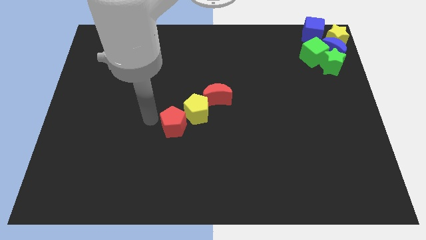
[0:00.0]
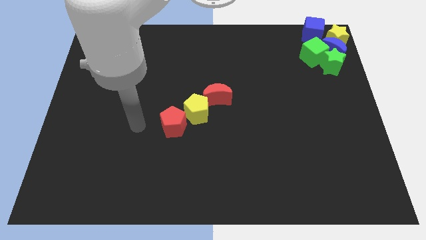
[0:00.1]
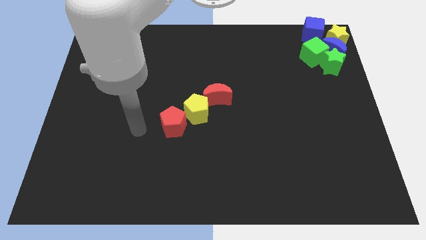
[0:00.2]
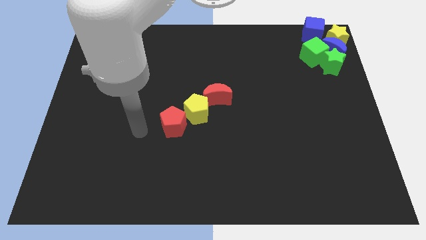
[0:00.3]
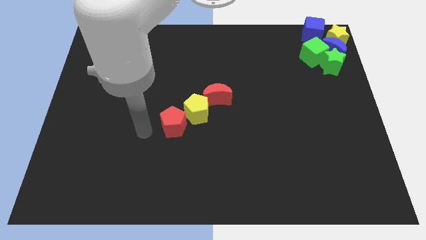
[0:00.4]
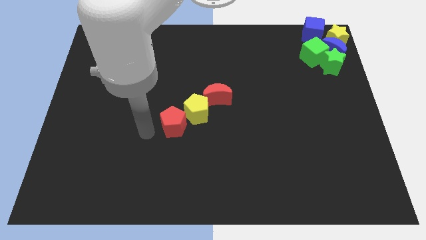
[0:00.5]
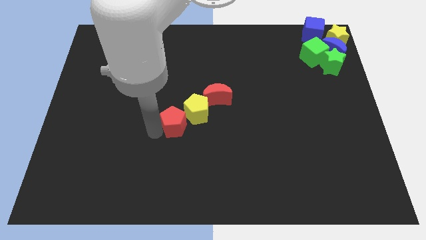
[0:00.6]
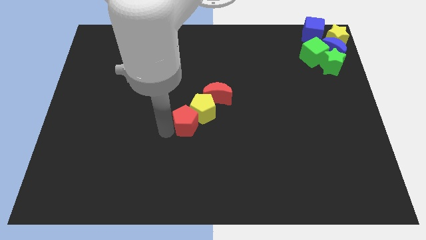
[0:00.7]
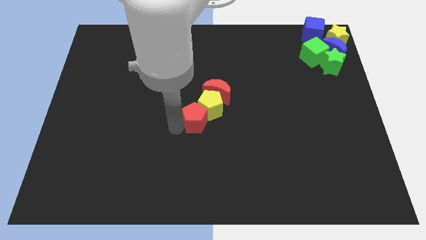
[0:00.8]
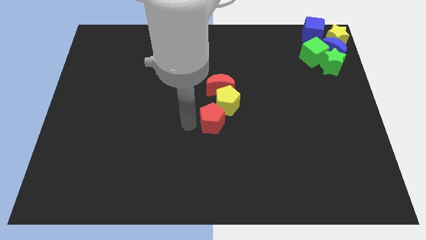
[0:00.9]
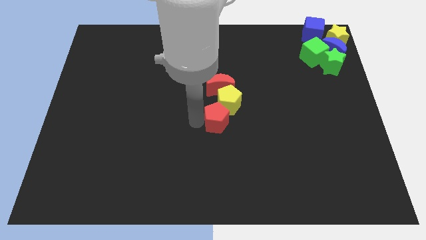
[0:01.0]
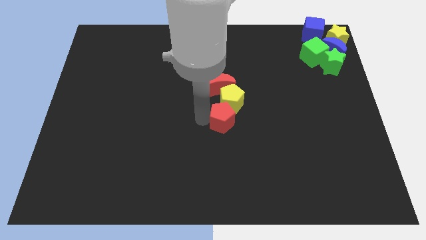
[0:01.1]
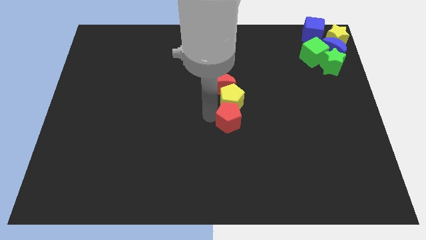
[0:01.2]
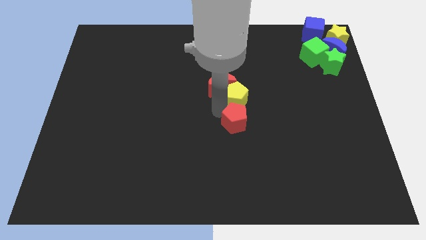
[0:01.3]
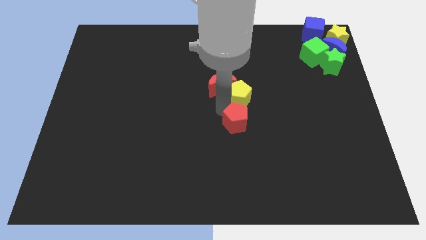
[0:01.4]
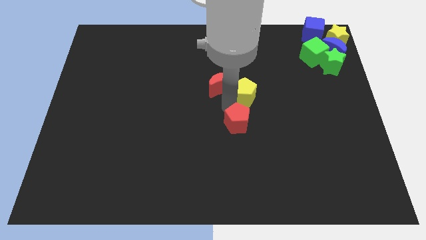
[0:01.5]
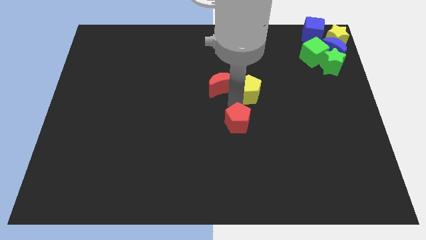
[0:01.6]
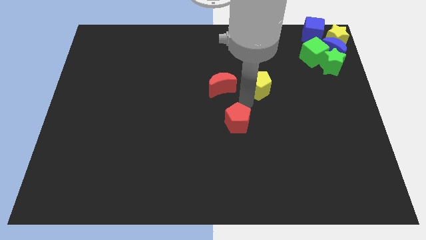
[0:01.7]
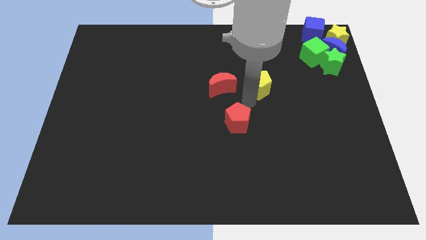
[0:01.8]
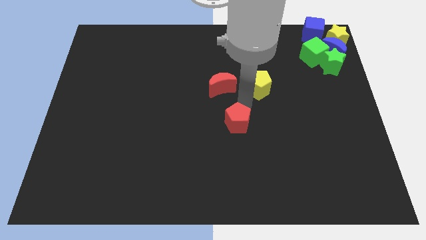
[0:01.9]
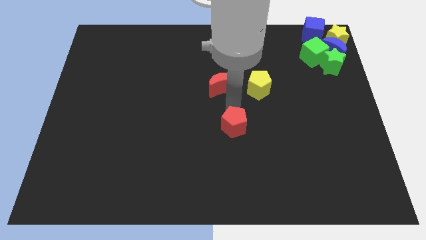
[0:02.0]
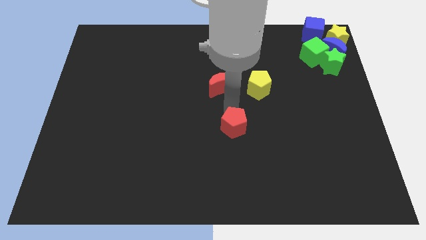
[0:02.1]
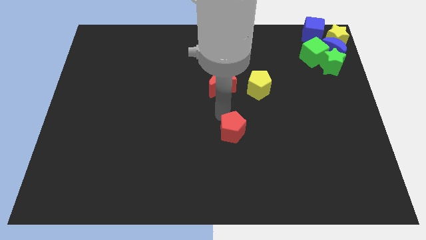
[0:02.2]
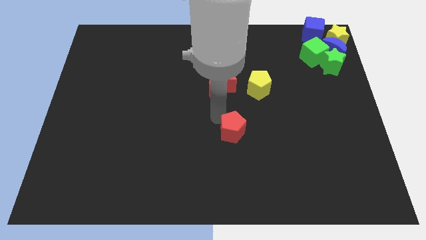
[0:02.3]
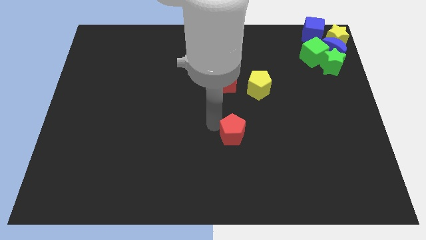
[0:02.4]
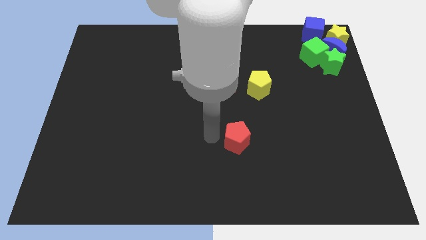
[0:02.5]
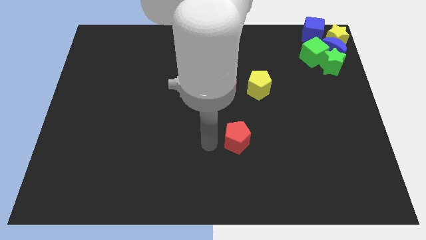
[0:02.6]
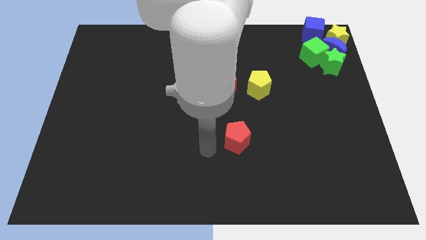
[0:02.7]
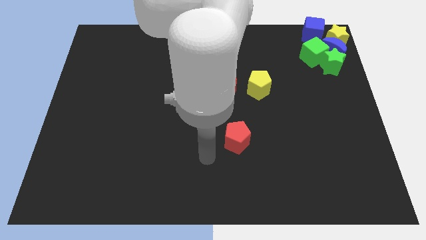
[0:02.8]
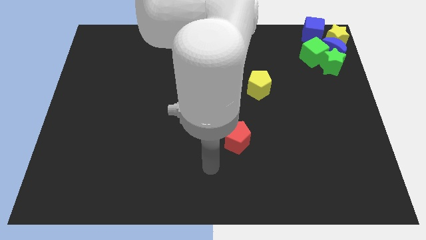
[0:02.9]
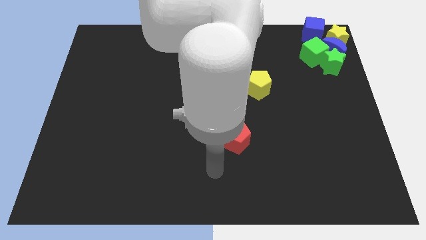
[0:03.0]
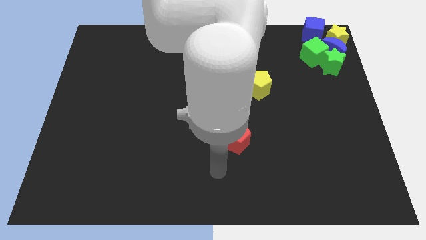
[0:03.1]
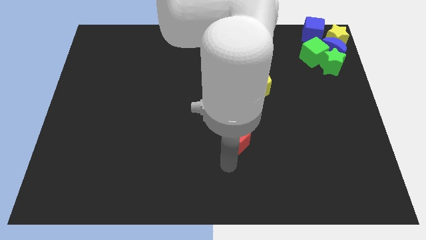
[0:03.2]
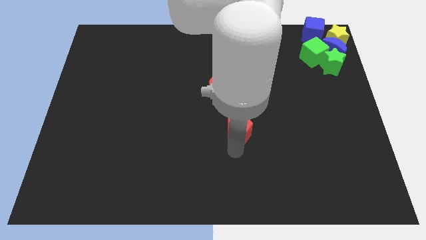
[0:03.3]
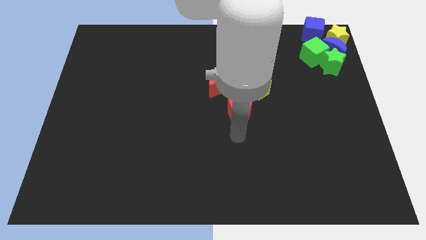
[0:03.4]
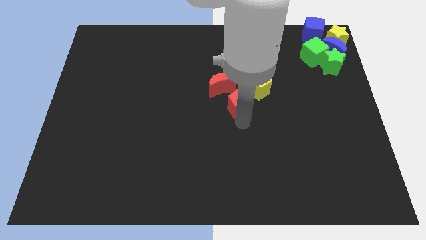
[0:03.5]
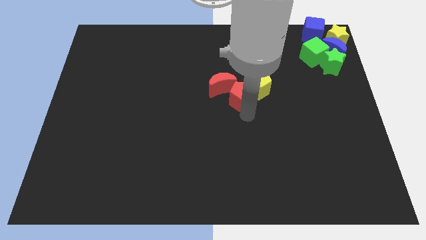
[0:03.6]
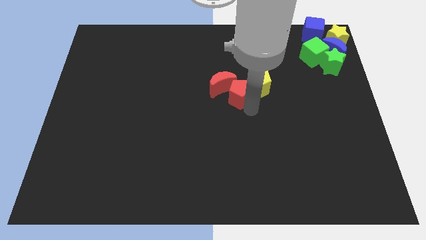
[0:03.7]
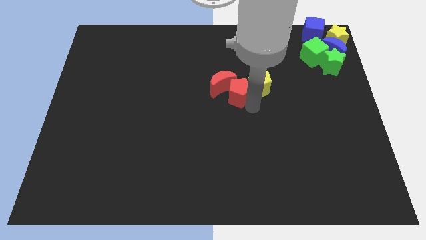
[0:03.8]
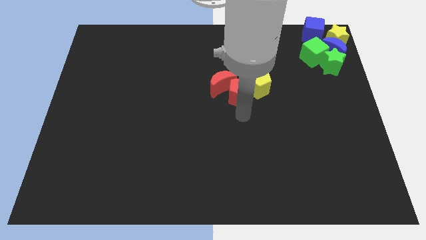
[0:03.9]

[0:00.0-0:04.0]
push the red blocks and yellow pentagon to the top side

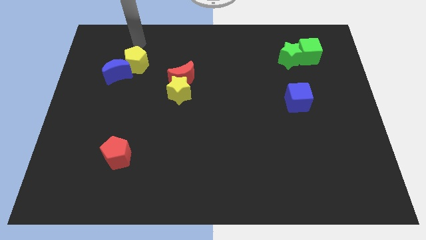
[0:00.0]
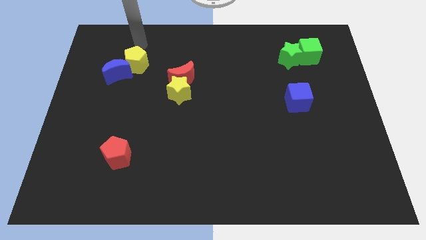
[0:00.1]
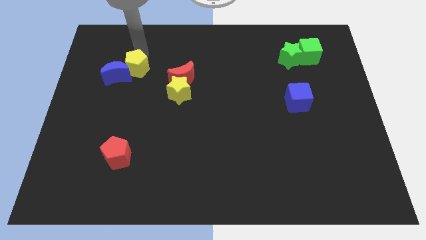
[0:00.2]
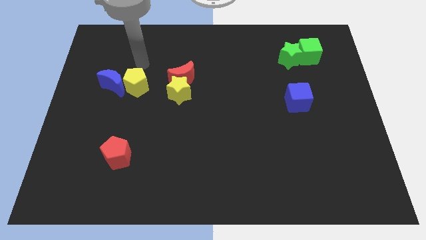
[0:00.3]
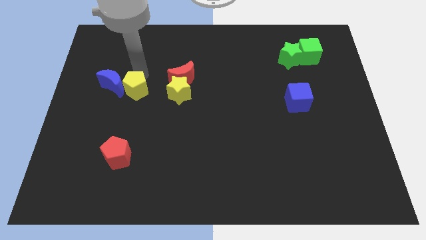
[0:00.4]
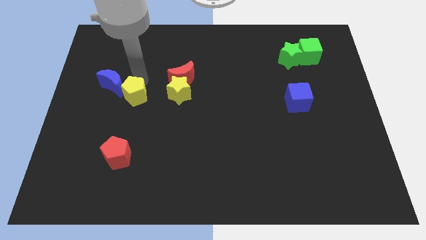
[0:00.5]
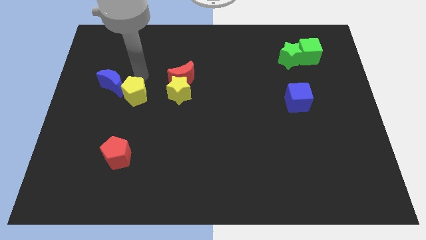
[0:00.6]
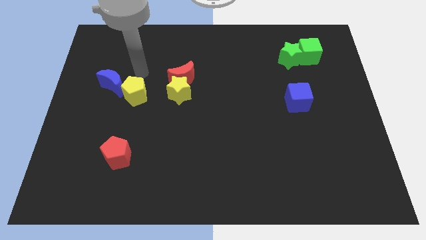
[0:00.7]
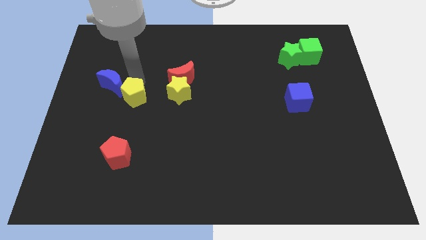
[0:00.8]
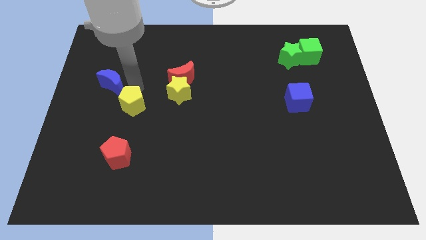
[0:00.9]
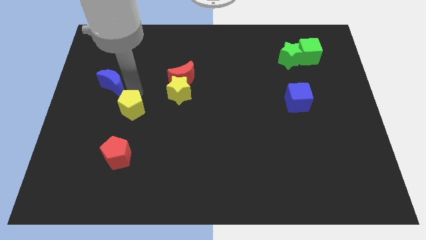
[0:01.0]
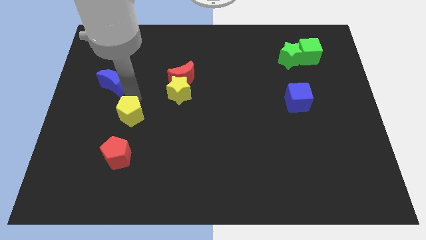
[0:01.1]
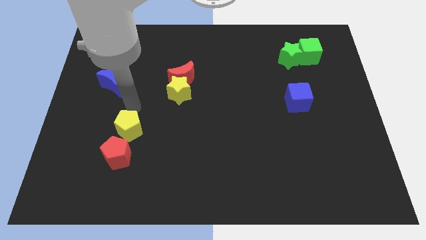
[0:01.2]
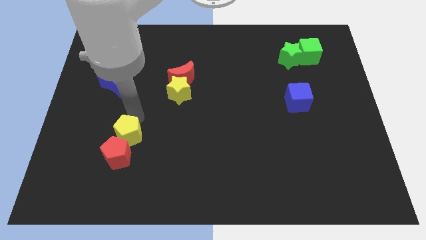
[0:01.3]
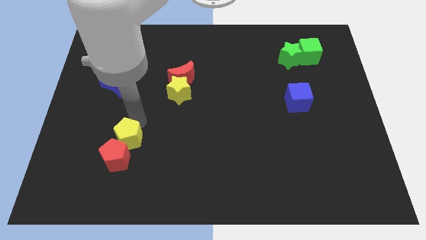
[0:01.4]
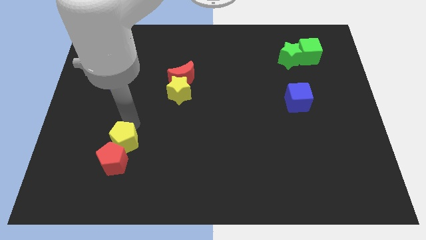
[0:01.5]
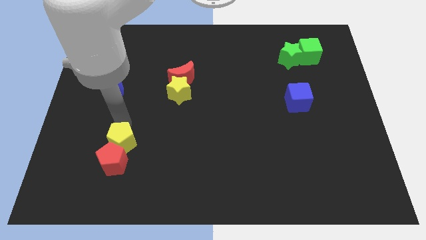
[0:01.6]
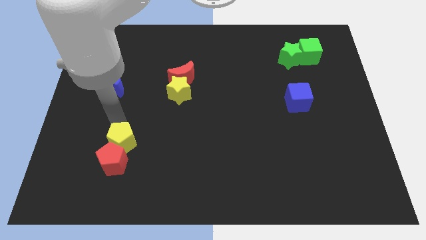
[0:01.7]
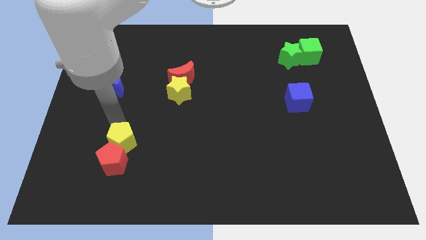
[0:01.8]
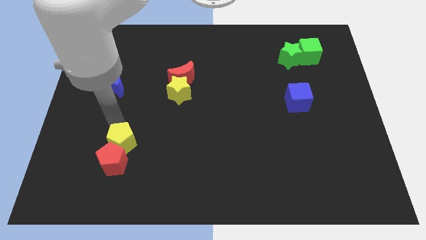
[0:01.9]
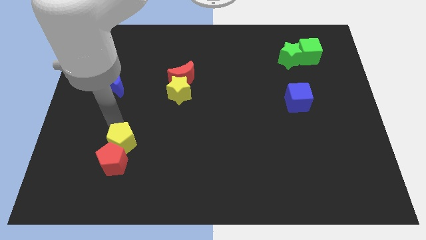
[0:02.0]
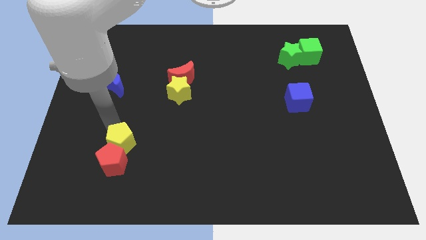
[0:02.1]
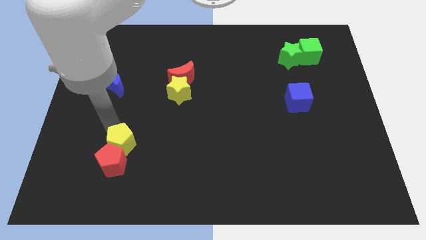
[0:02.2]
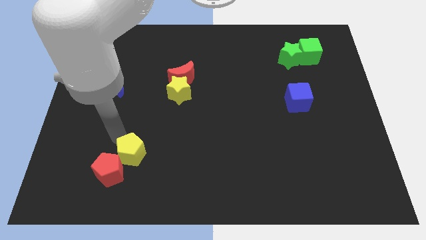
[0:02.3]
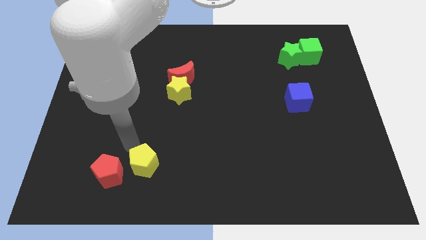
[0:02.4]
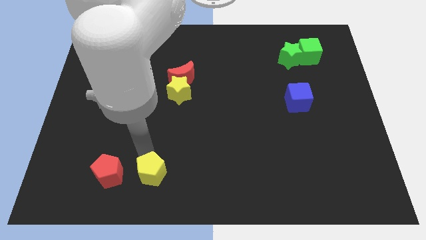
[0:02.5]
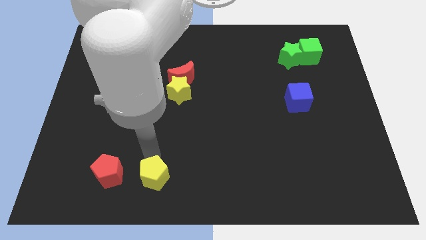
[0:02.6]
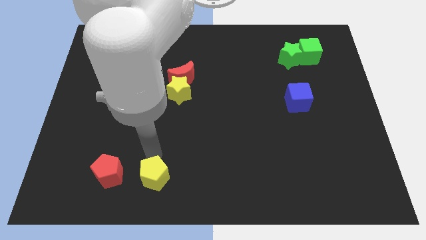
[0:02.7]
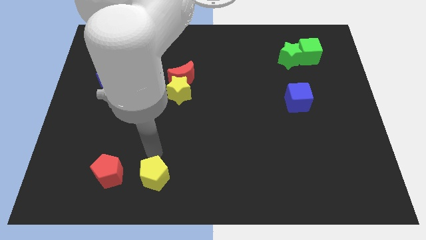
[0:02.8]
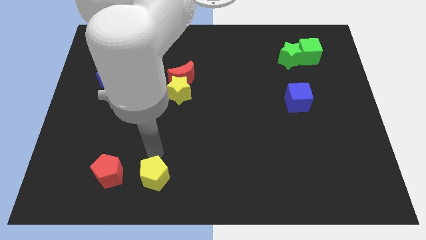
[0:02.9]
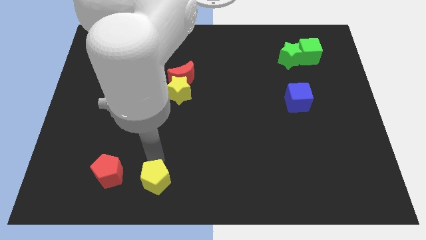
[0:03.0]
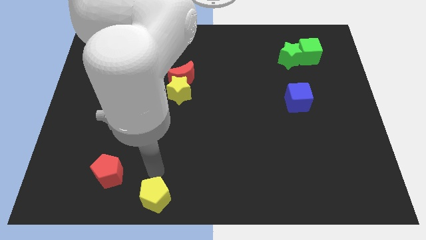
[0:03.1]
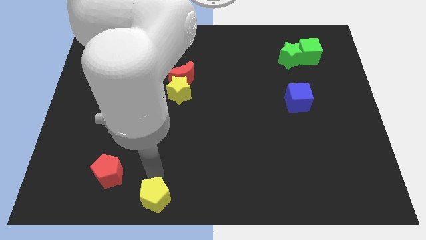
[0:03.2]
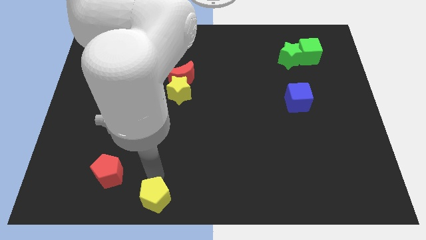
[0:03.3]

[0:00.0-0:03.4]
place the yellow pentagon bottom center

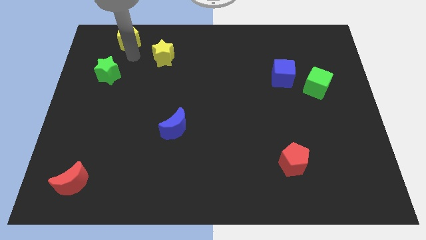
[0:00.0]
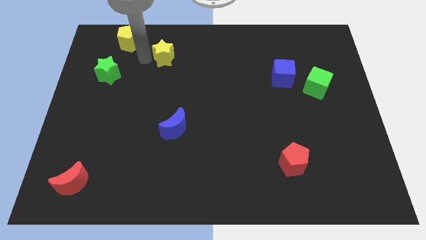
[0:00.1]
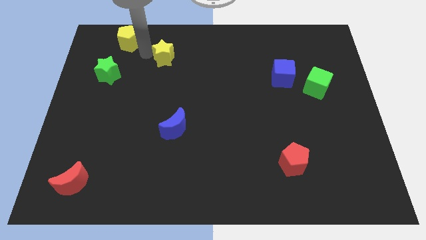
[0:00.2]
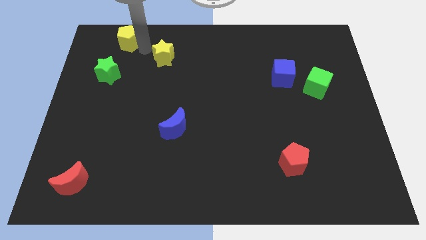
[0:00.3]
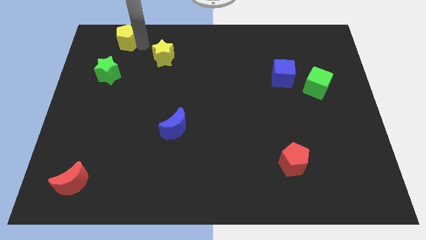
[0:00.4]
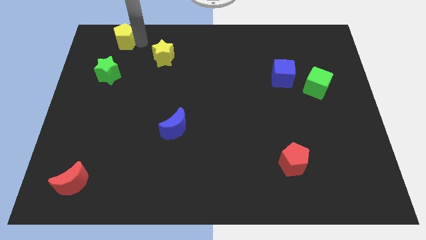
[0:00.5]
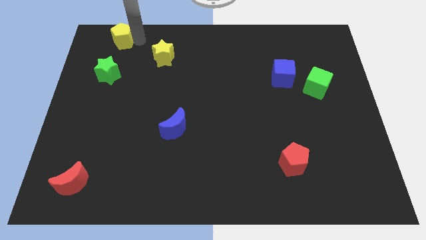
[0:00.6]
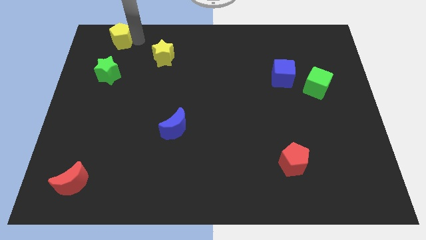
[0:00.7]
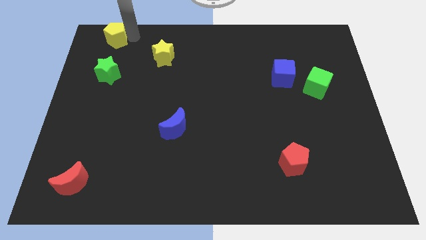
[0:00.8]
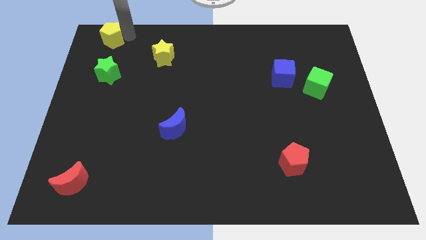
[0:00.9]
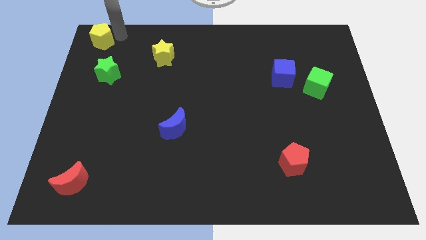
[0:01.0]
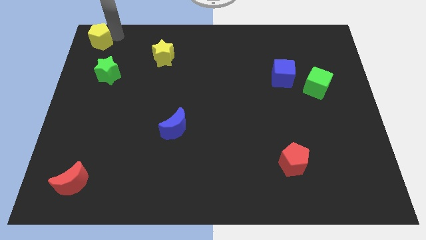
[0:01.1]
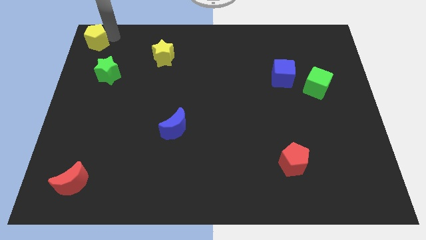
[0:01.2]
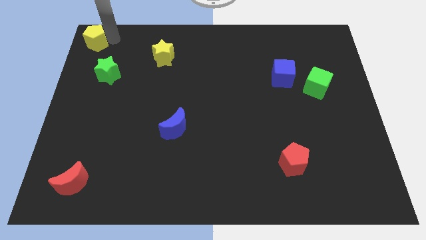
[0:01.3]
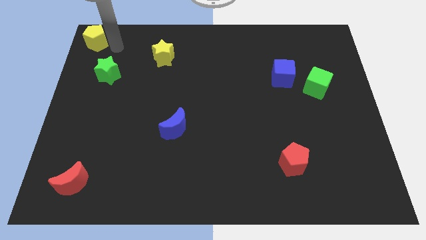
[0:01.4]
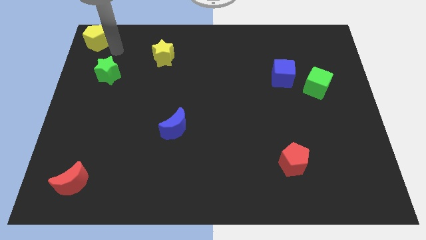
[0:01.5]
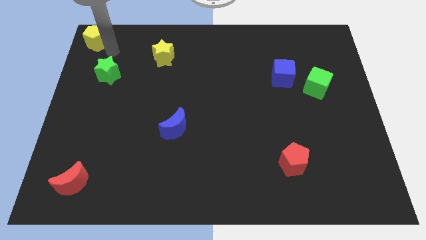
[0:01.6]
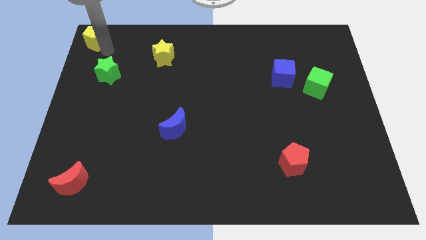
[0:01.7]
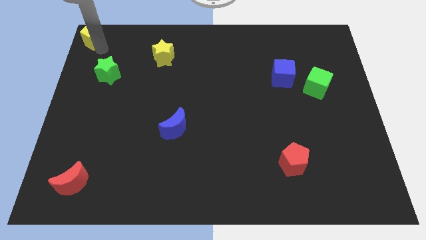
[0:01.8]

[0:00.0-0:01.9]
push the yellow pentagon to the top left corner of the board
